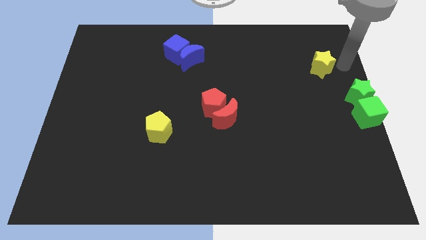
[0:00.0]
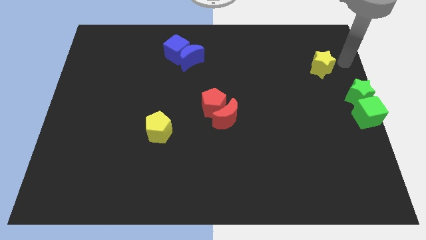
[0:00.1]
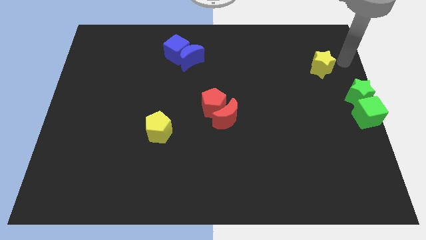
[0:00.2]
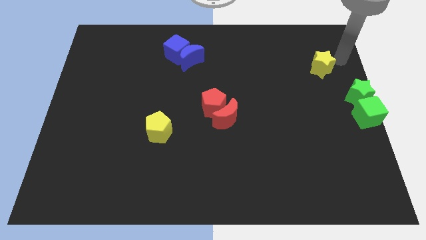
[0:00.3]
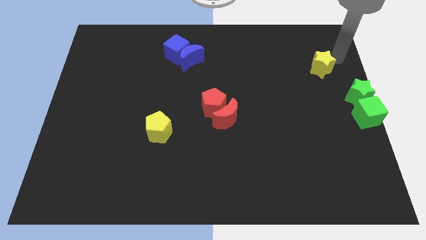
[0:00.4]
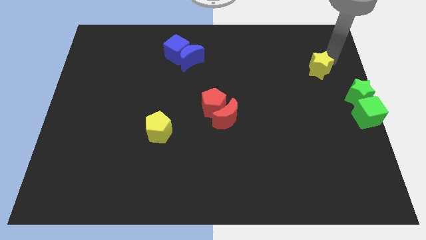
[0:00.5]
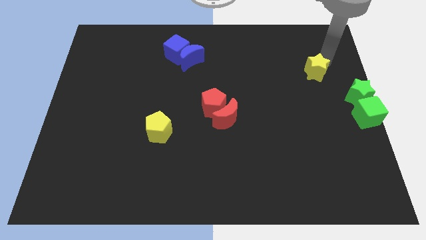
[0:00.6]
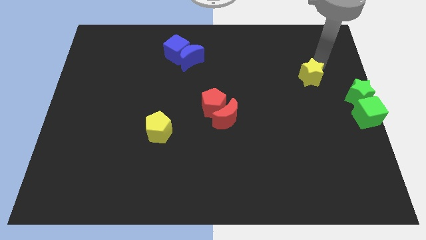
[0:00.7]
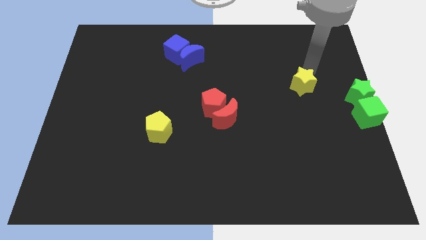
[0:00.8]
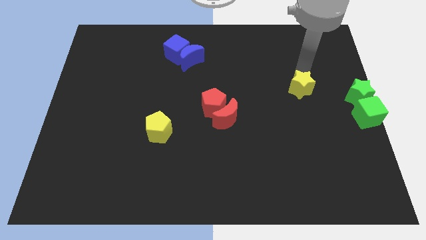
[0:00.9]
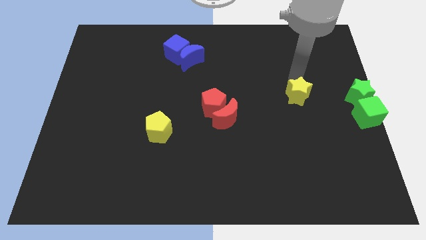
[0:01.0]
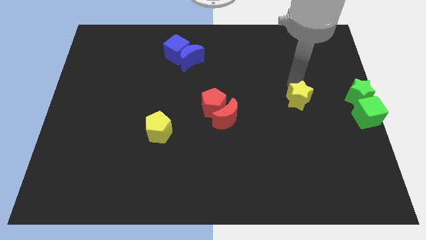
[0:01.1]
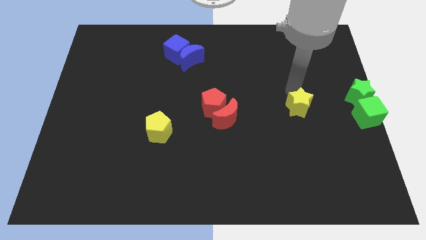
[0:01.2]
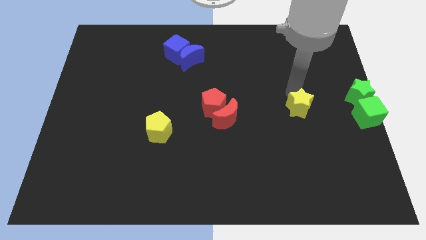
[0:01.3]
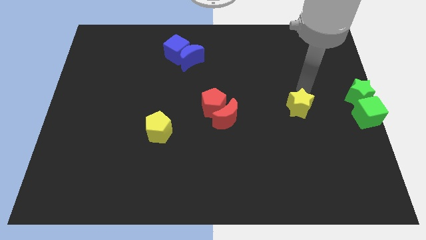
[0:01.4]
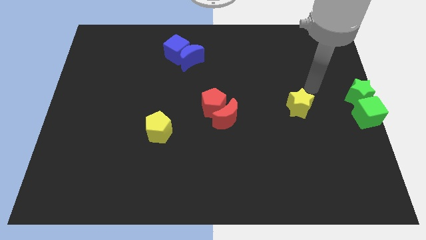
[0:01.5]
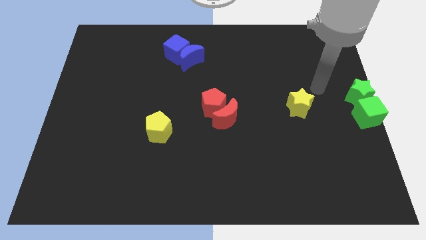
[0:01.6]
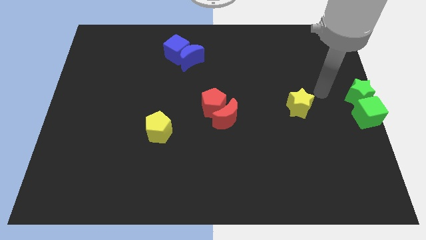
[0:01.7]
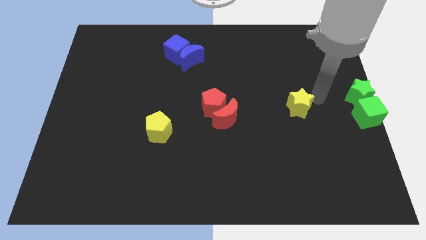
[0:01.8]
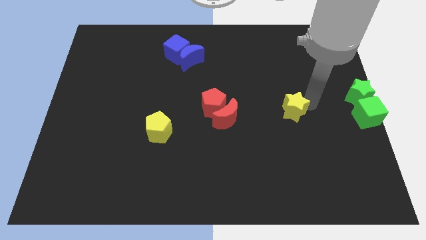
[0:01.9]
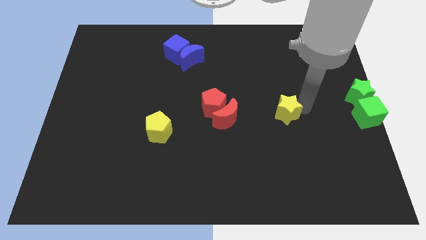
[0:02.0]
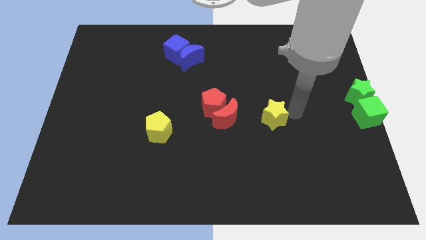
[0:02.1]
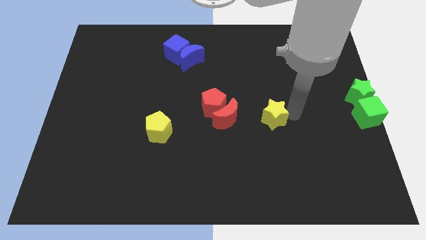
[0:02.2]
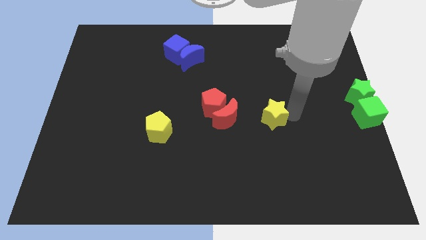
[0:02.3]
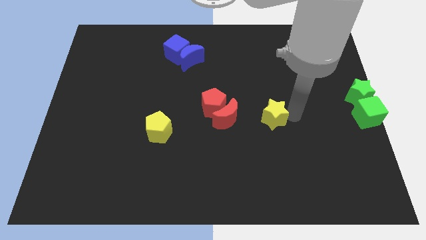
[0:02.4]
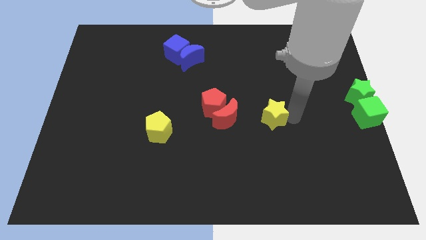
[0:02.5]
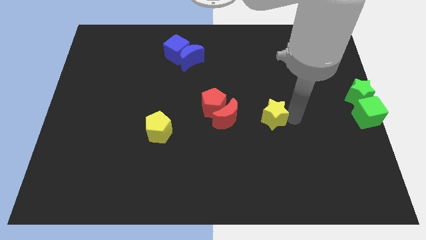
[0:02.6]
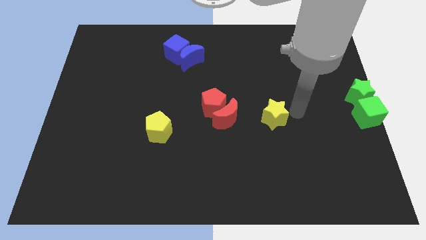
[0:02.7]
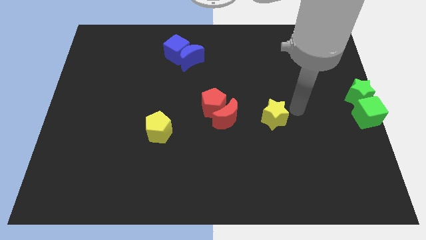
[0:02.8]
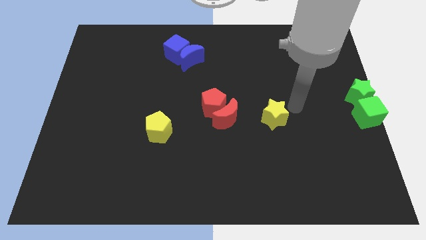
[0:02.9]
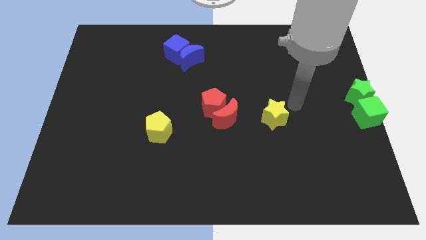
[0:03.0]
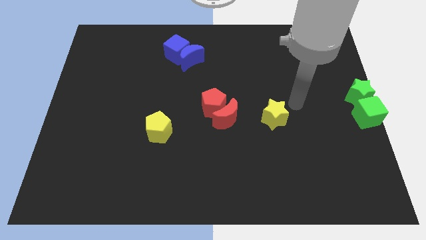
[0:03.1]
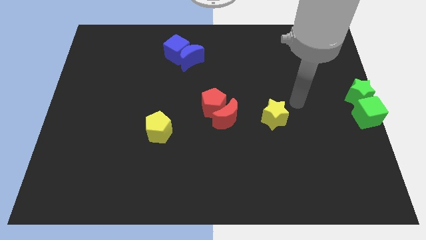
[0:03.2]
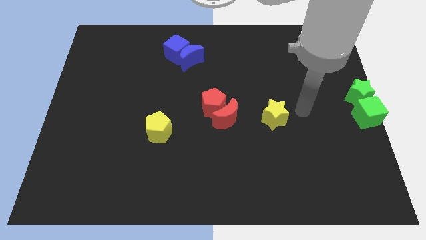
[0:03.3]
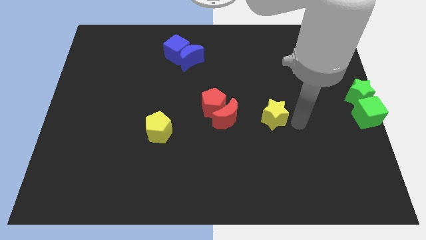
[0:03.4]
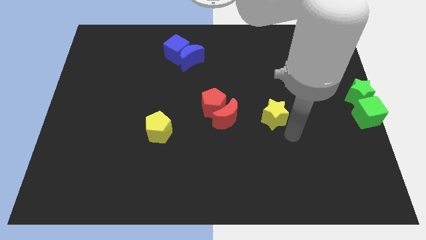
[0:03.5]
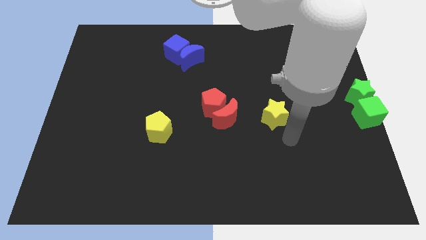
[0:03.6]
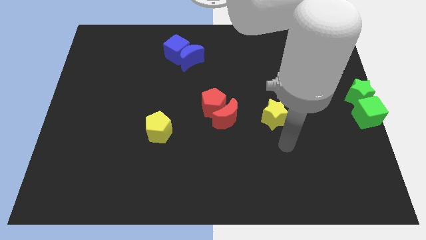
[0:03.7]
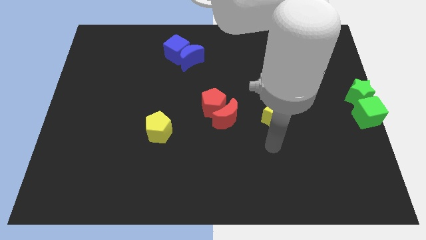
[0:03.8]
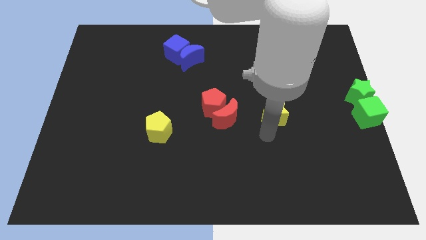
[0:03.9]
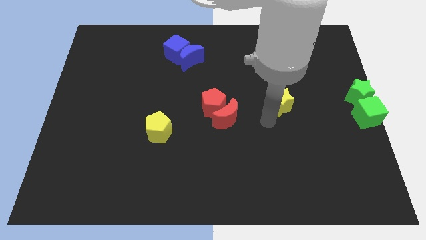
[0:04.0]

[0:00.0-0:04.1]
drag the yellow star to the right side of the red moon

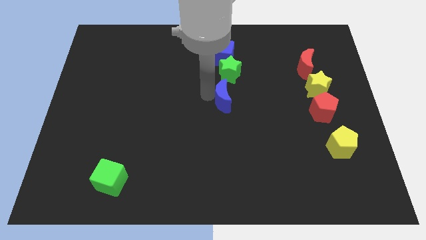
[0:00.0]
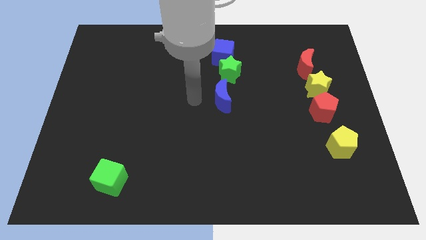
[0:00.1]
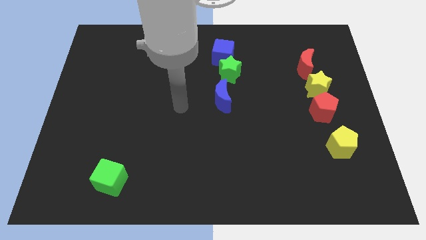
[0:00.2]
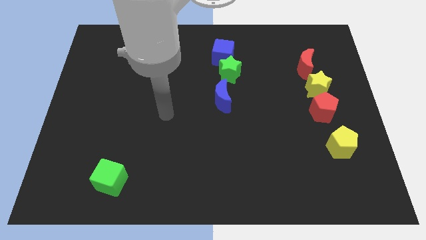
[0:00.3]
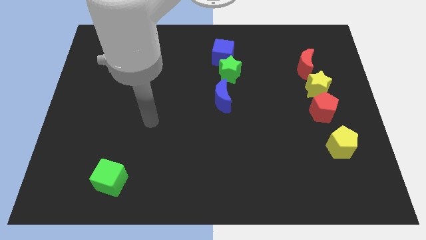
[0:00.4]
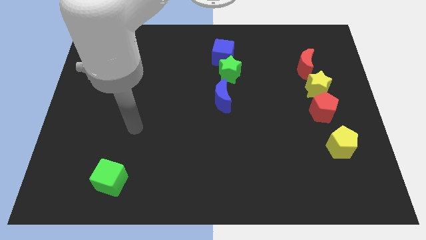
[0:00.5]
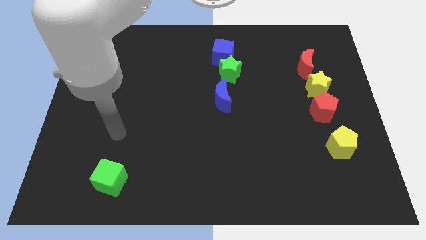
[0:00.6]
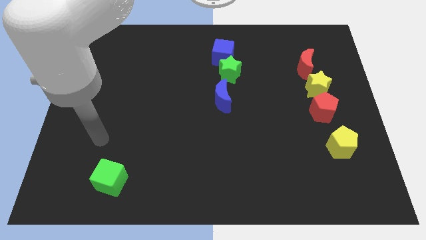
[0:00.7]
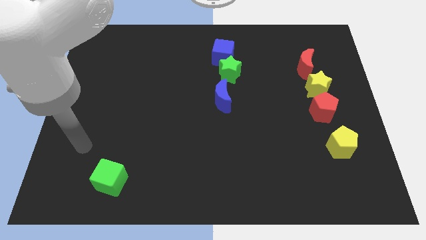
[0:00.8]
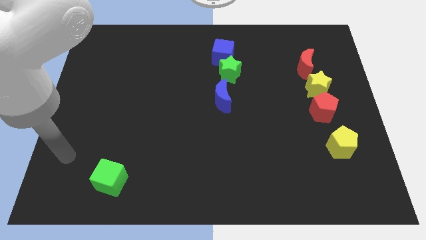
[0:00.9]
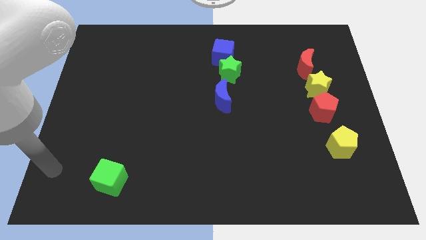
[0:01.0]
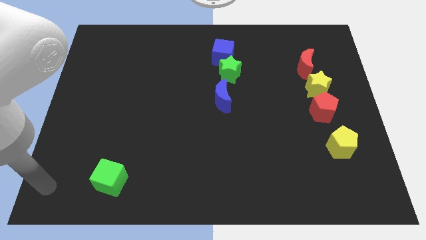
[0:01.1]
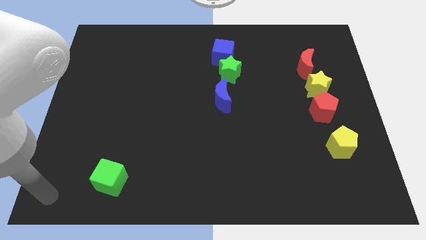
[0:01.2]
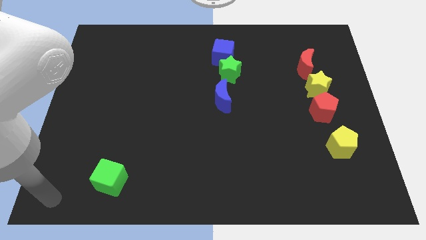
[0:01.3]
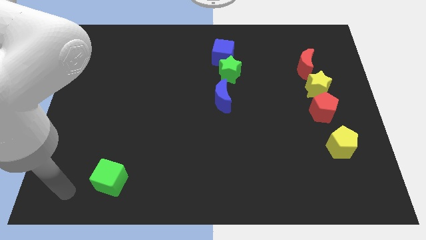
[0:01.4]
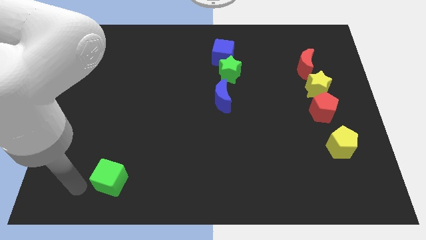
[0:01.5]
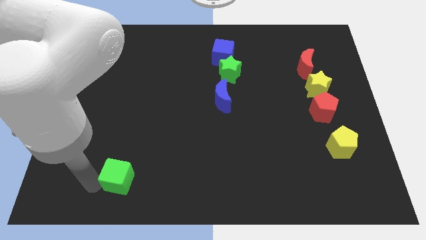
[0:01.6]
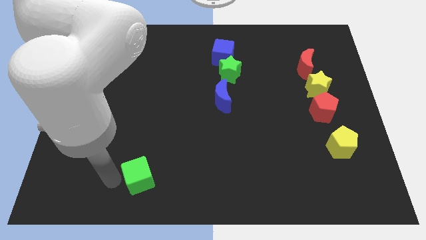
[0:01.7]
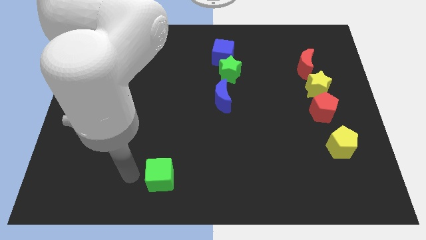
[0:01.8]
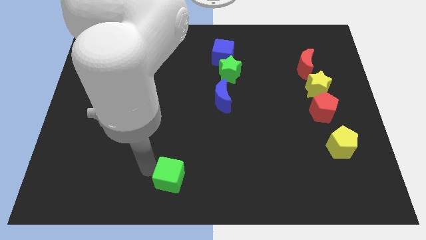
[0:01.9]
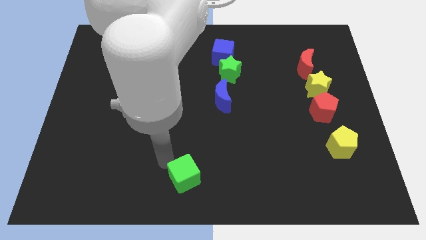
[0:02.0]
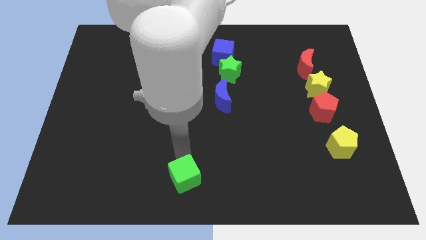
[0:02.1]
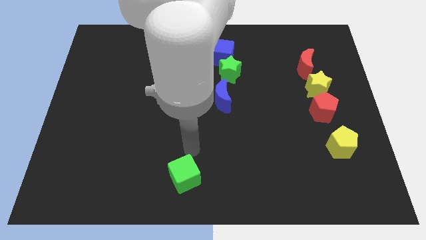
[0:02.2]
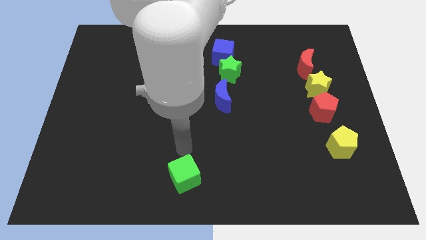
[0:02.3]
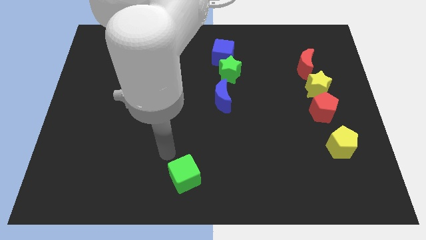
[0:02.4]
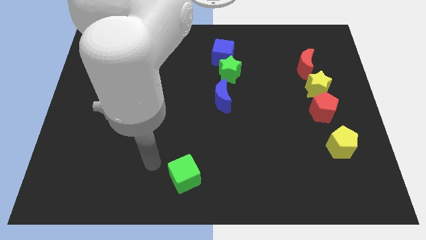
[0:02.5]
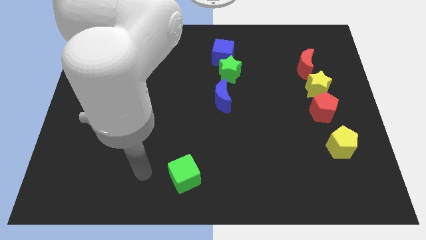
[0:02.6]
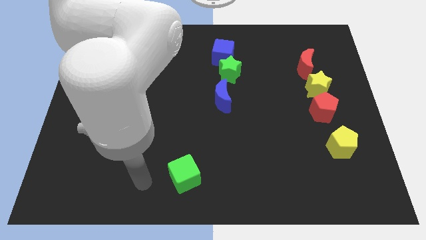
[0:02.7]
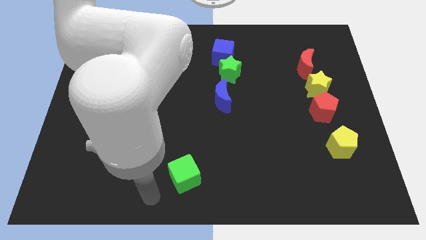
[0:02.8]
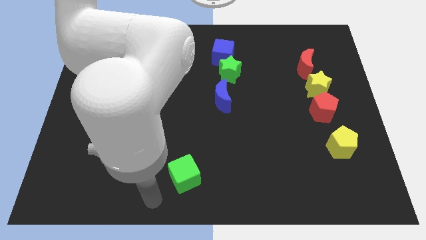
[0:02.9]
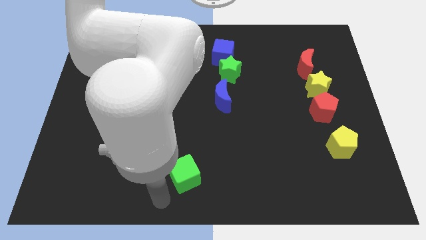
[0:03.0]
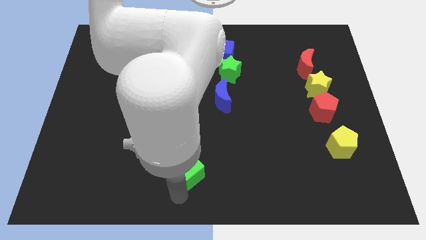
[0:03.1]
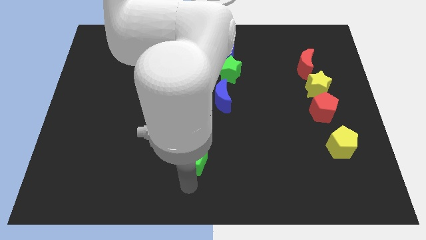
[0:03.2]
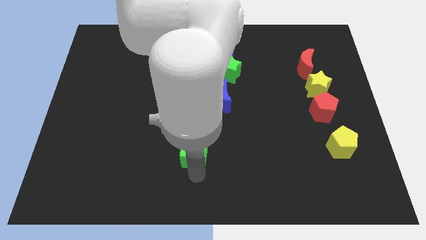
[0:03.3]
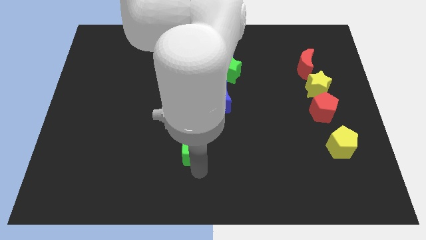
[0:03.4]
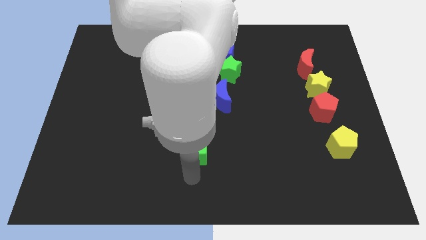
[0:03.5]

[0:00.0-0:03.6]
slide the green cube towards the bottom side of the blue moon

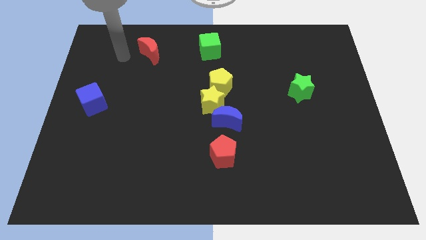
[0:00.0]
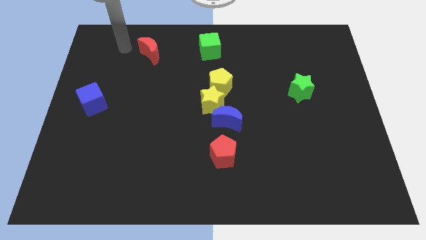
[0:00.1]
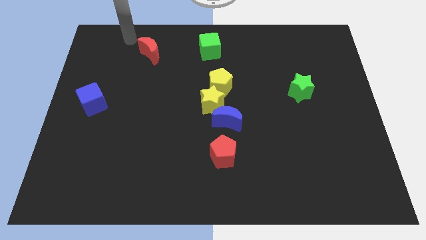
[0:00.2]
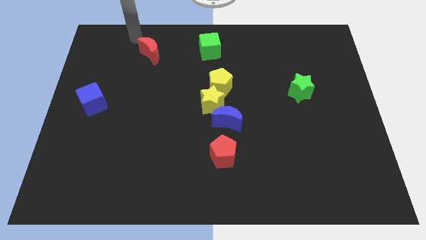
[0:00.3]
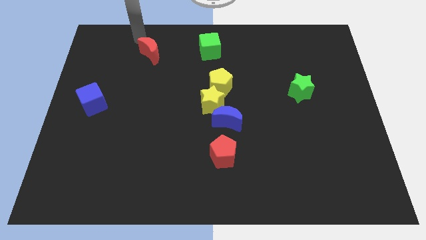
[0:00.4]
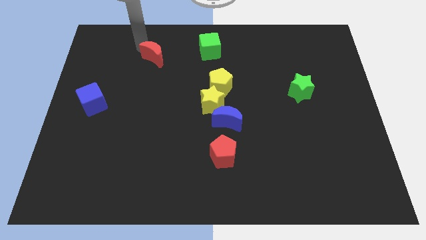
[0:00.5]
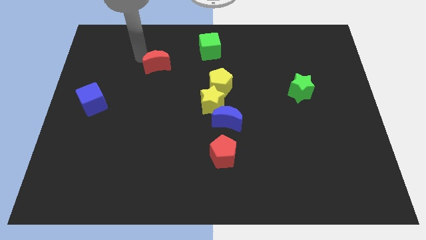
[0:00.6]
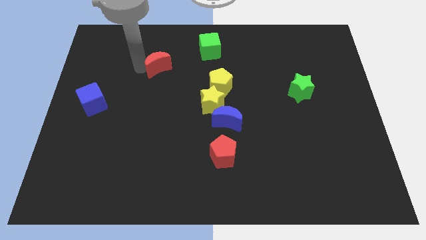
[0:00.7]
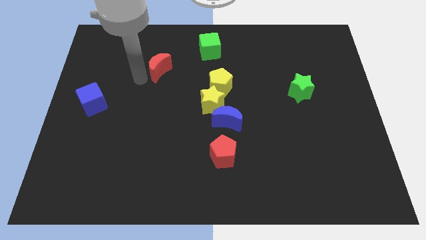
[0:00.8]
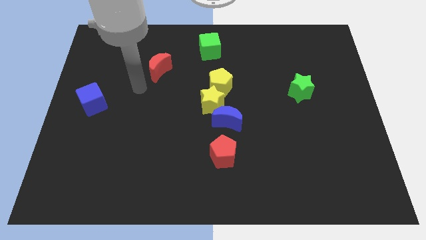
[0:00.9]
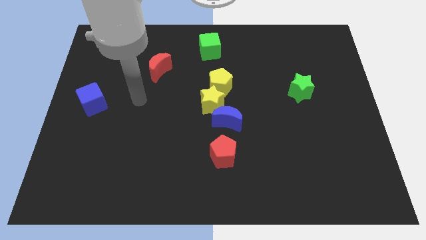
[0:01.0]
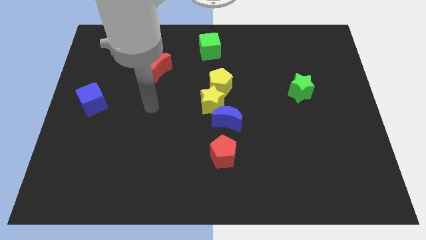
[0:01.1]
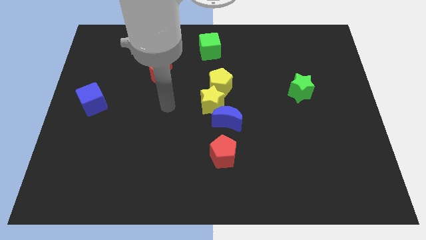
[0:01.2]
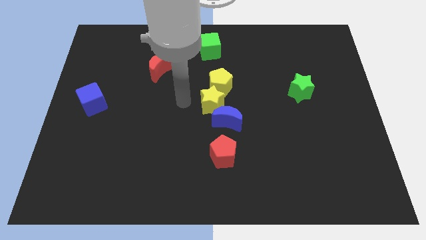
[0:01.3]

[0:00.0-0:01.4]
slightly push the red crescent to the bottom of the board
